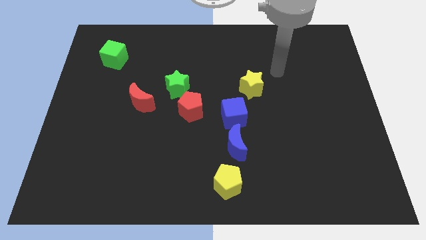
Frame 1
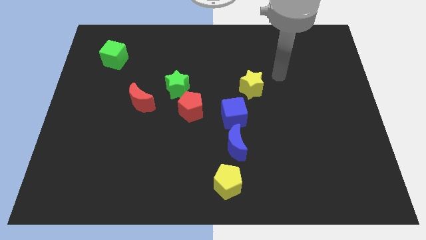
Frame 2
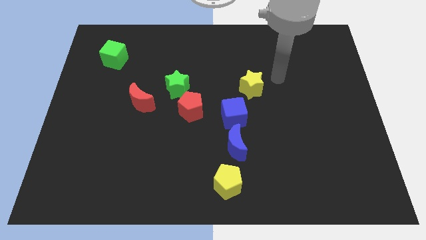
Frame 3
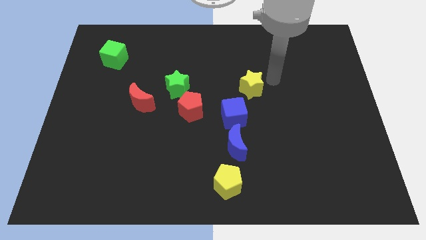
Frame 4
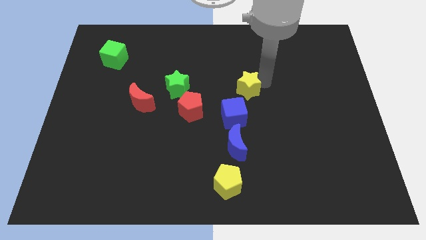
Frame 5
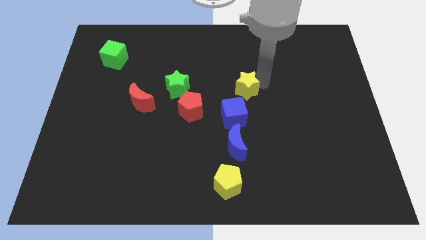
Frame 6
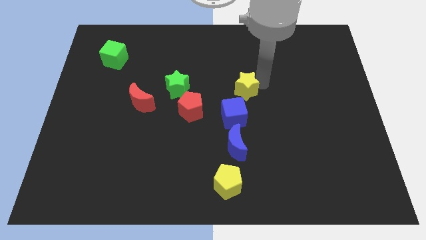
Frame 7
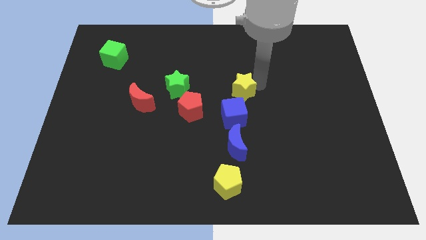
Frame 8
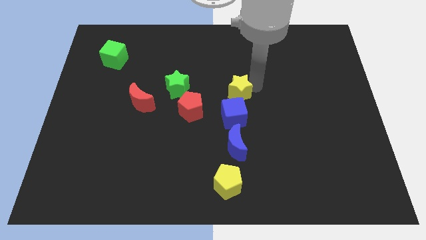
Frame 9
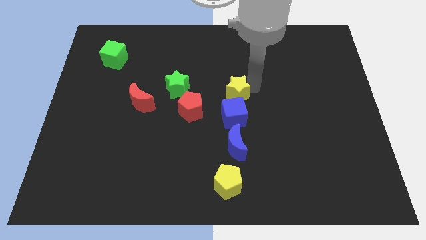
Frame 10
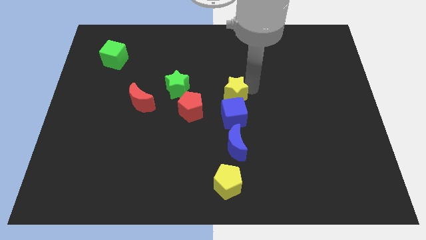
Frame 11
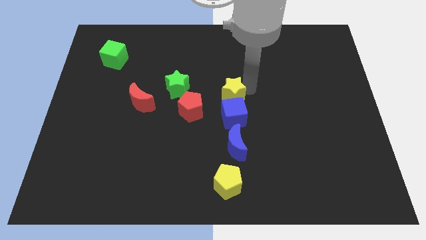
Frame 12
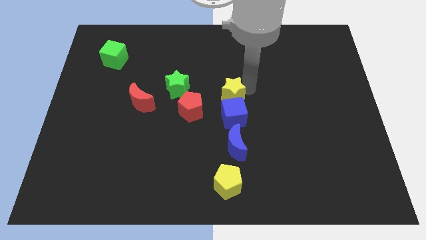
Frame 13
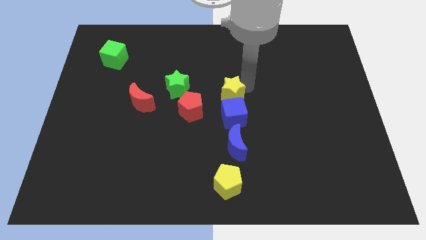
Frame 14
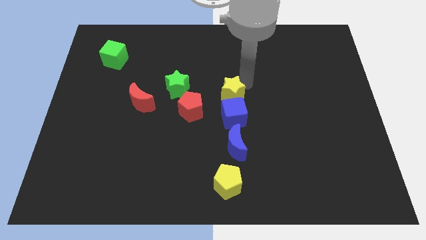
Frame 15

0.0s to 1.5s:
put the yellow star above the blue cube

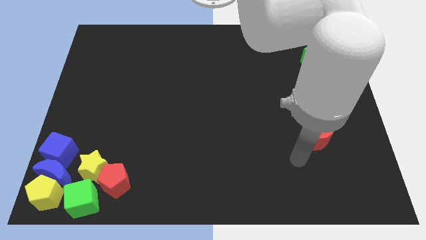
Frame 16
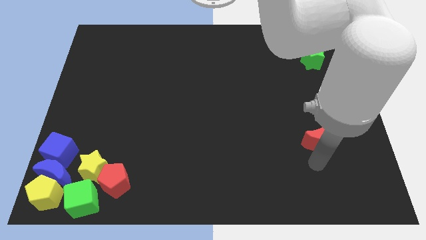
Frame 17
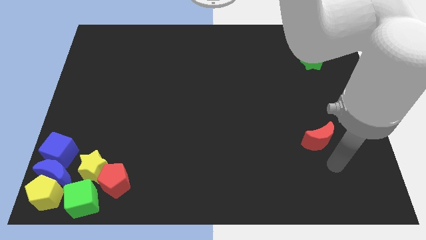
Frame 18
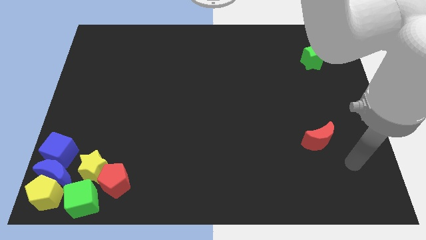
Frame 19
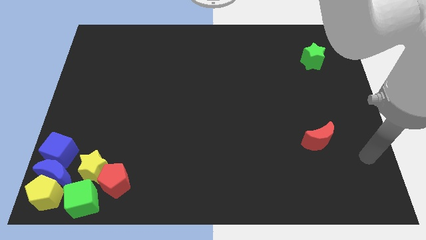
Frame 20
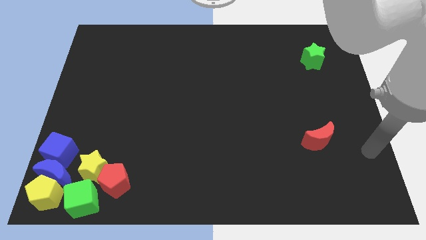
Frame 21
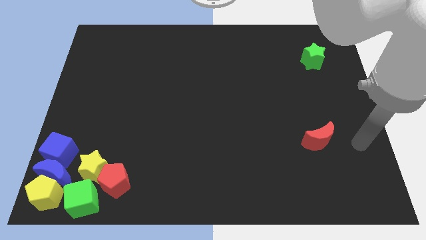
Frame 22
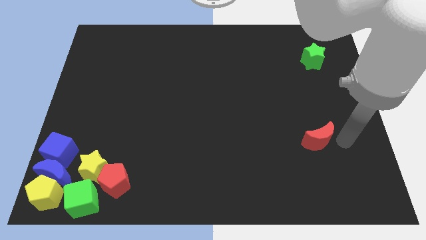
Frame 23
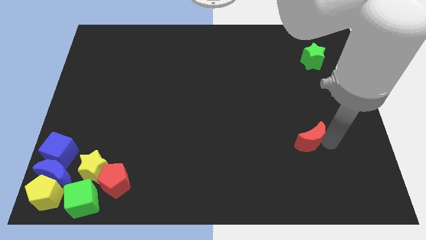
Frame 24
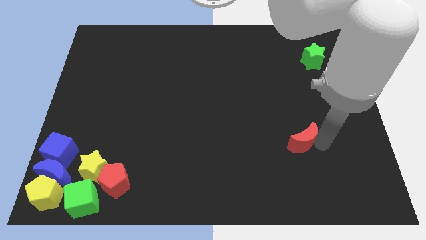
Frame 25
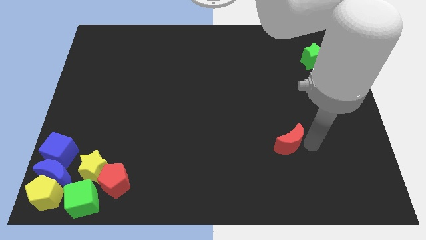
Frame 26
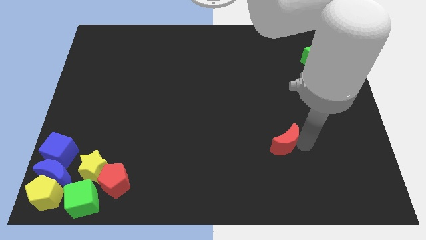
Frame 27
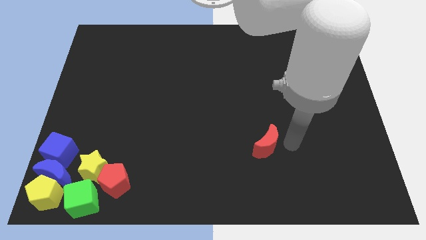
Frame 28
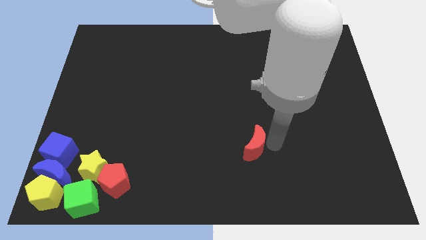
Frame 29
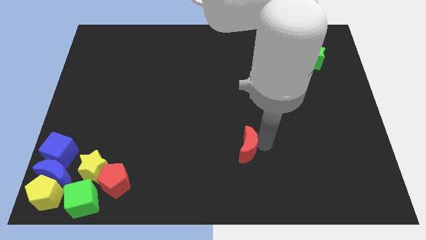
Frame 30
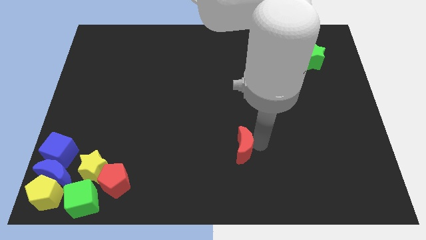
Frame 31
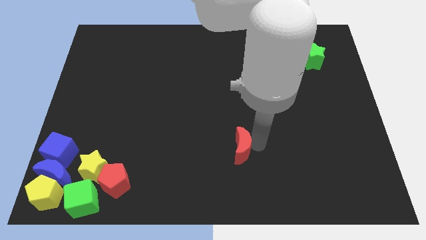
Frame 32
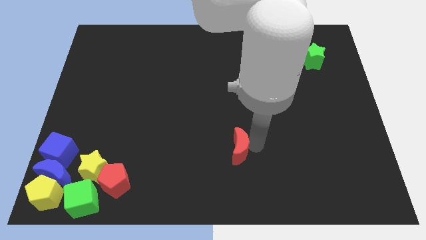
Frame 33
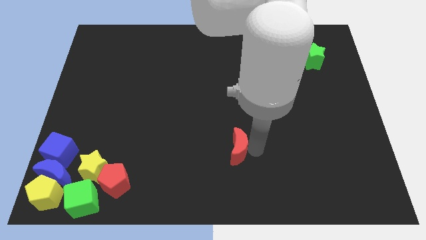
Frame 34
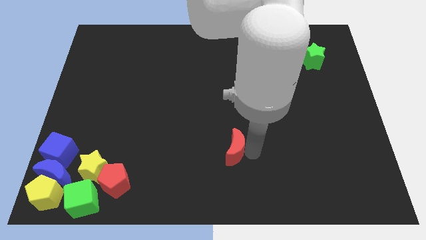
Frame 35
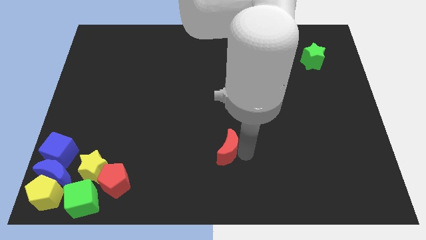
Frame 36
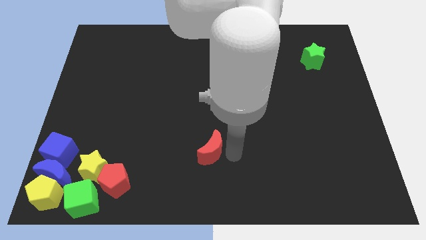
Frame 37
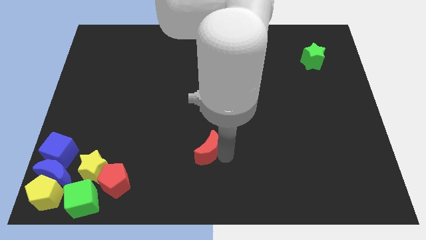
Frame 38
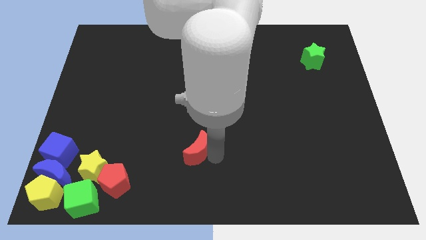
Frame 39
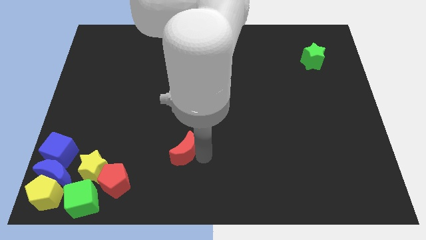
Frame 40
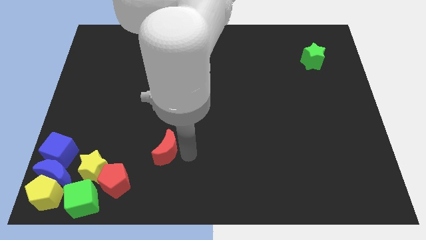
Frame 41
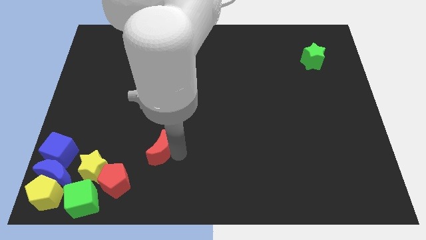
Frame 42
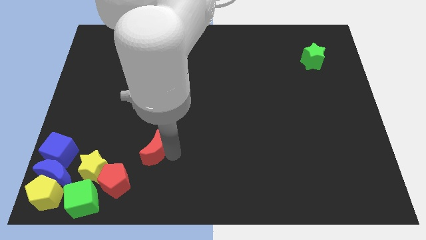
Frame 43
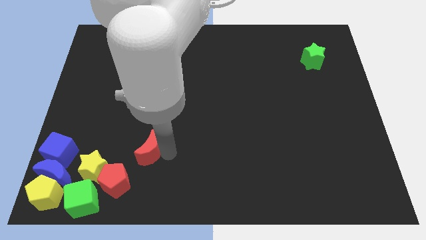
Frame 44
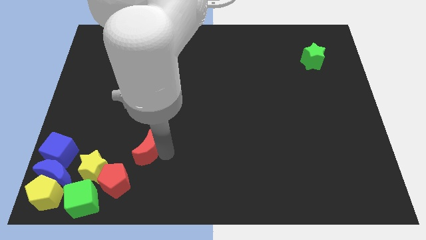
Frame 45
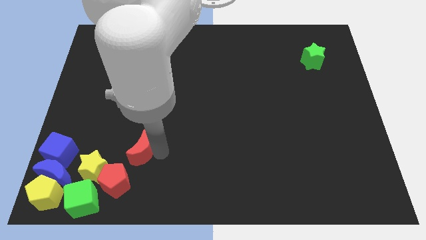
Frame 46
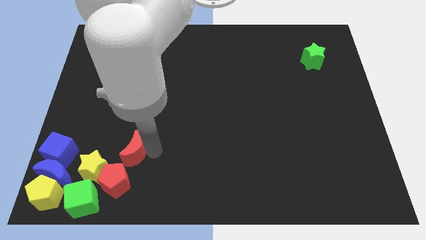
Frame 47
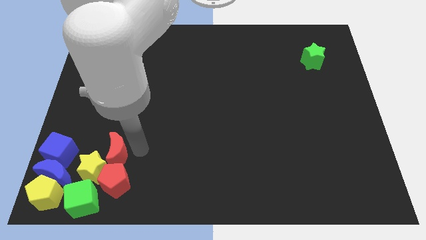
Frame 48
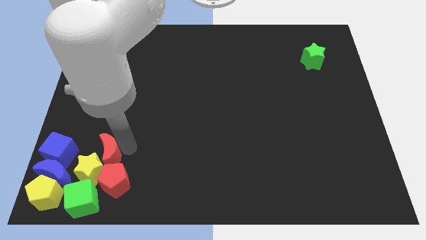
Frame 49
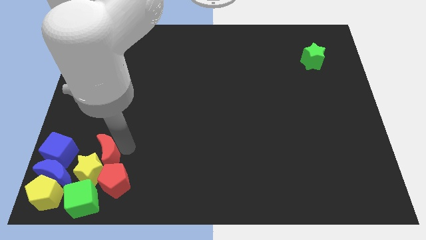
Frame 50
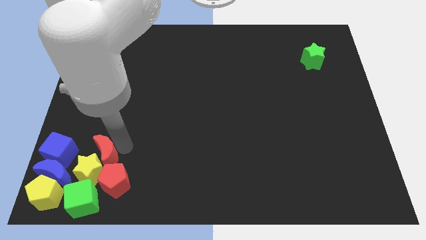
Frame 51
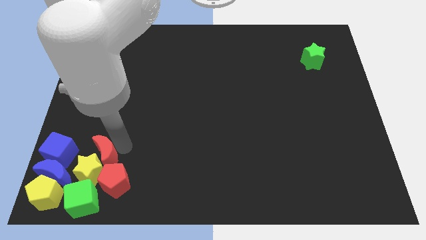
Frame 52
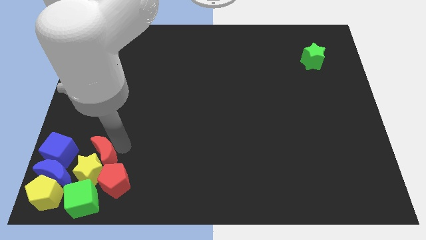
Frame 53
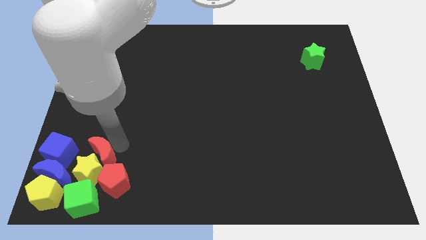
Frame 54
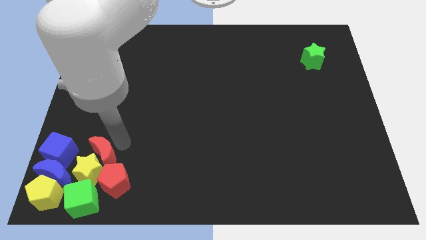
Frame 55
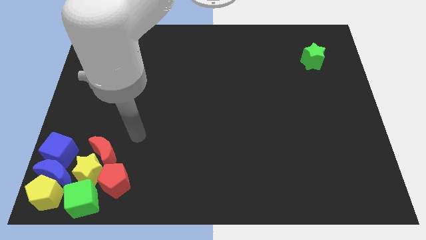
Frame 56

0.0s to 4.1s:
slide red moon into yellow star

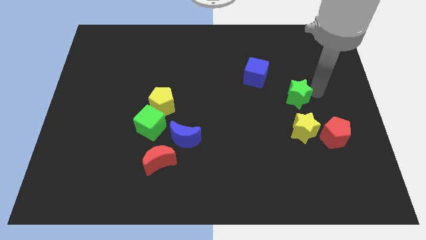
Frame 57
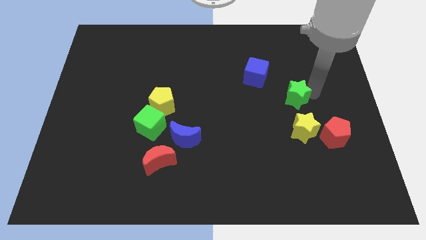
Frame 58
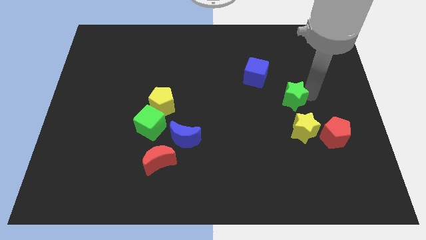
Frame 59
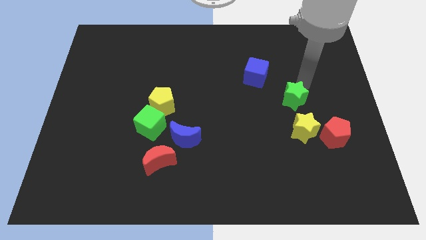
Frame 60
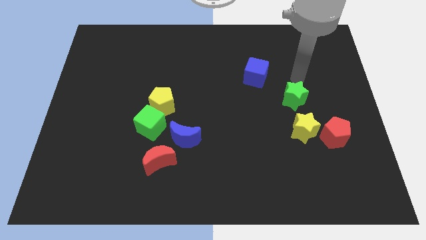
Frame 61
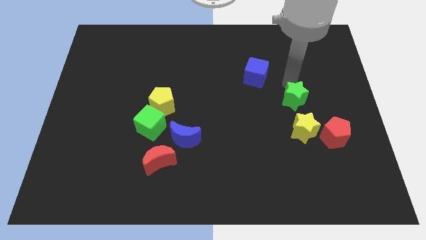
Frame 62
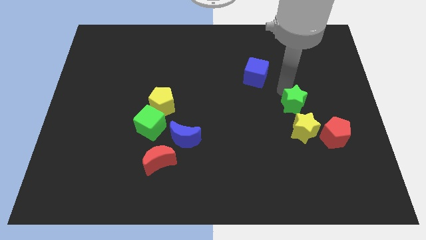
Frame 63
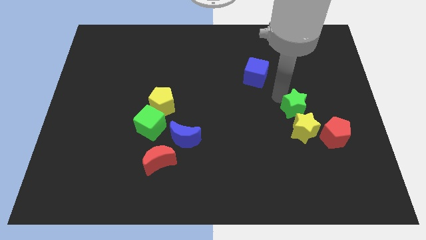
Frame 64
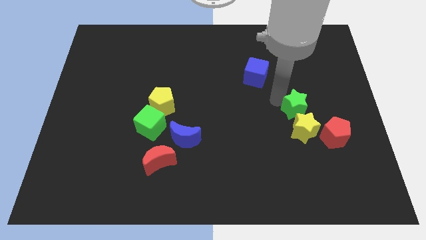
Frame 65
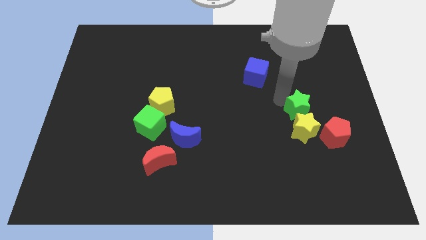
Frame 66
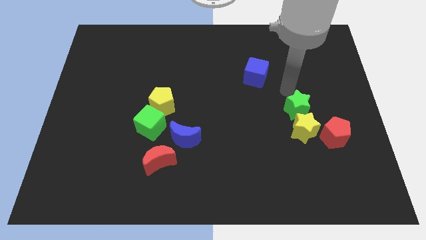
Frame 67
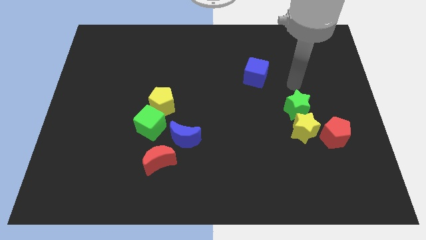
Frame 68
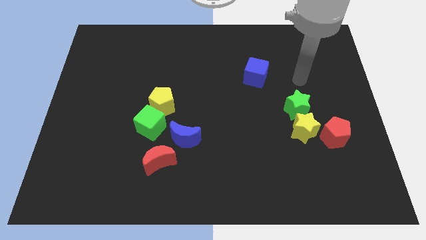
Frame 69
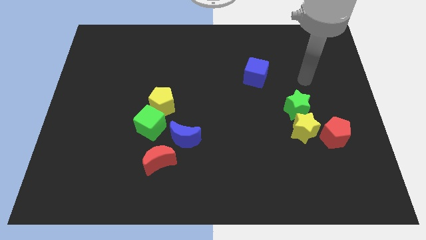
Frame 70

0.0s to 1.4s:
push green star above yellow star

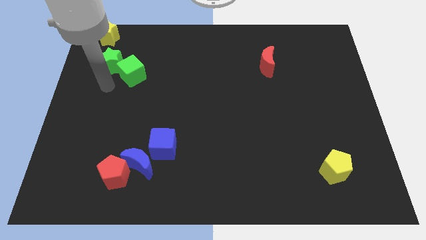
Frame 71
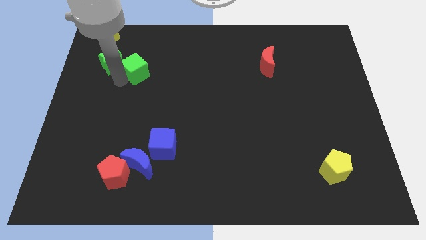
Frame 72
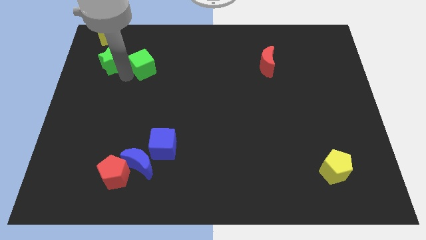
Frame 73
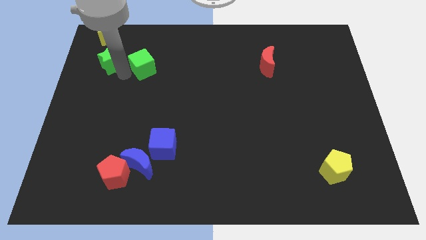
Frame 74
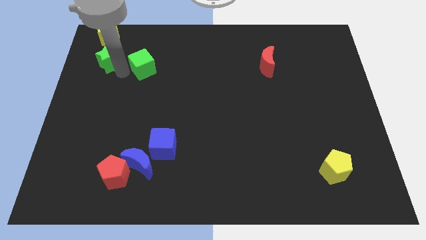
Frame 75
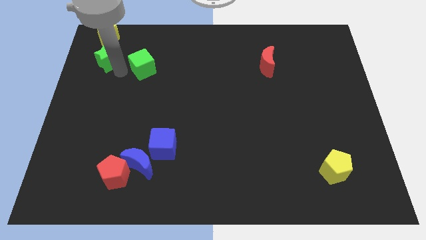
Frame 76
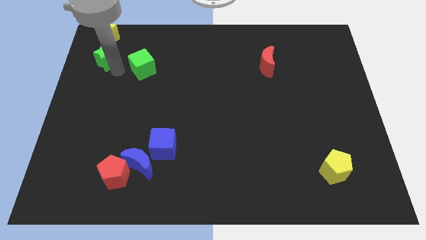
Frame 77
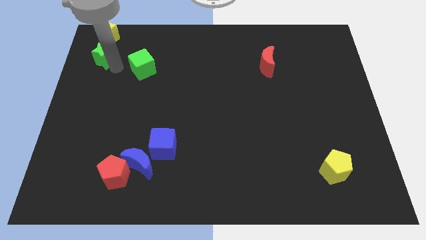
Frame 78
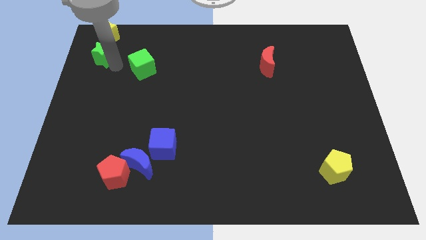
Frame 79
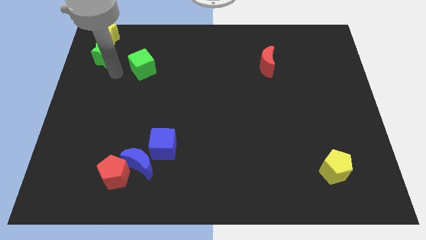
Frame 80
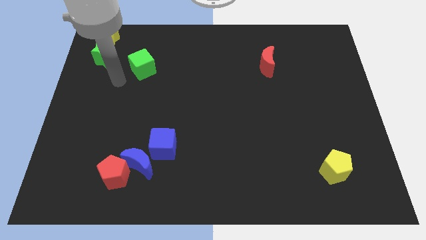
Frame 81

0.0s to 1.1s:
slightly move the yellow star to the left side of the board

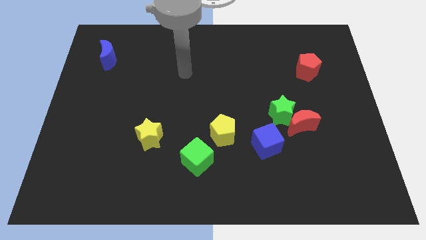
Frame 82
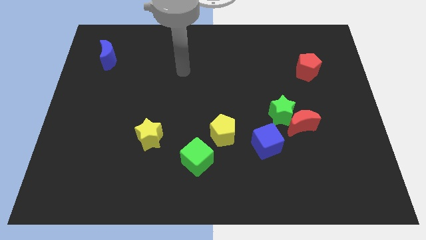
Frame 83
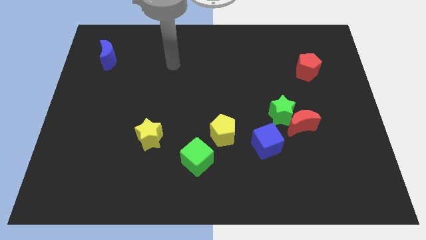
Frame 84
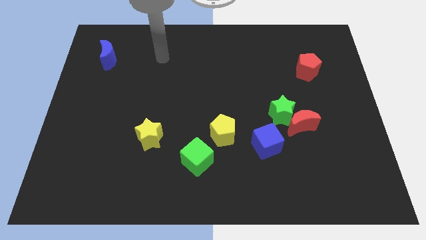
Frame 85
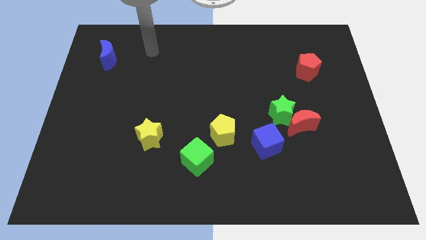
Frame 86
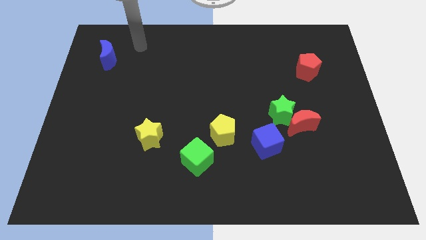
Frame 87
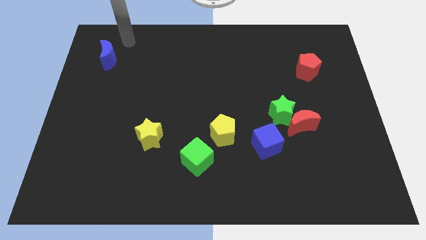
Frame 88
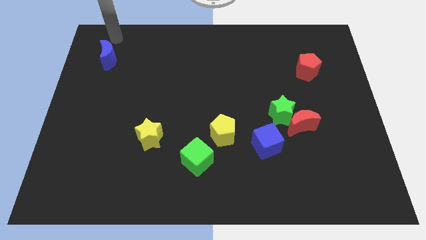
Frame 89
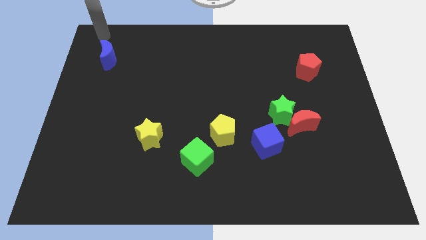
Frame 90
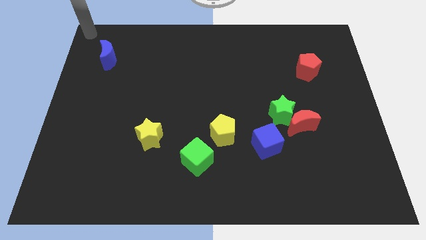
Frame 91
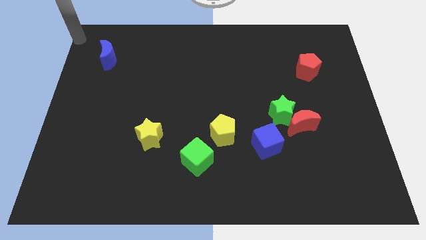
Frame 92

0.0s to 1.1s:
place your arm at the top left corner
